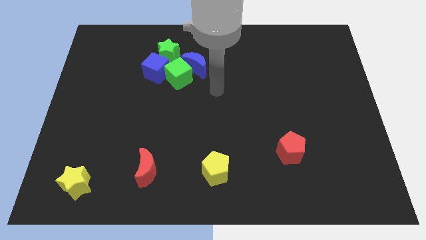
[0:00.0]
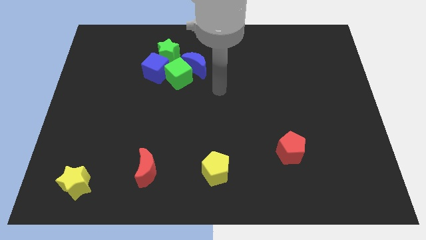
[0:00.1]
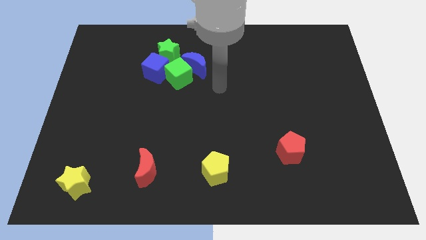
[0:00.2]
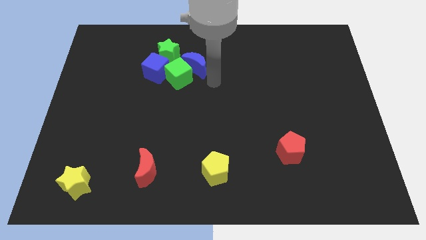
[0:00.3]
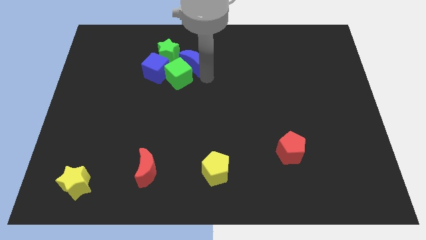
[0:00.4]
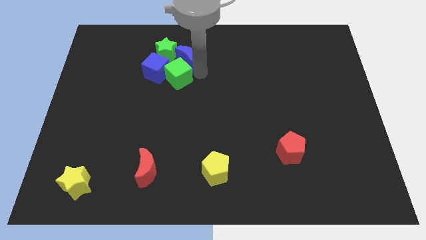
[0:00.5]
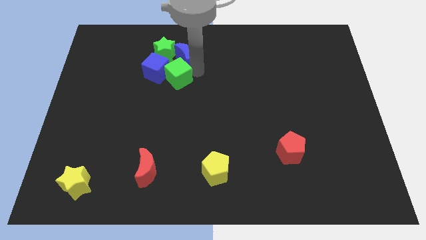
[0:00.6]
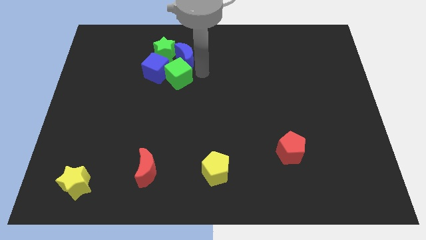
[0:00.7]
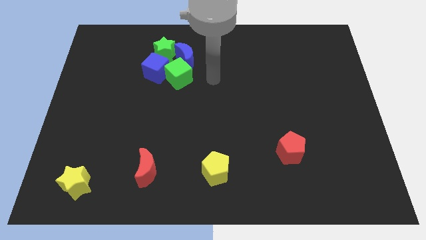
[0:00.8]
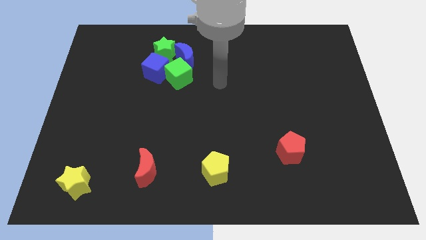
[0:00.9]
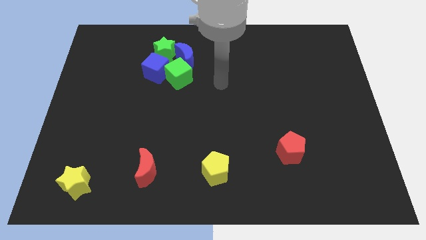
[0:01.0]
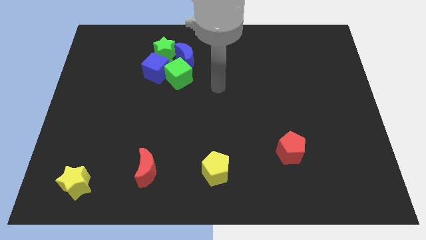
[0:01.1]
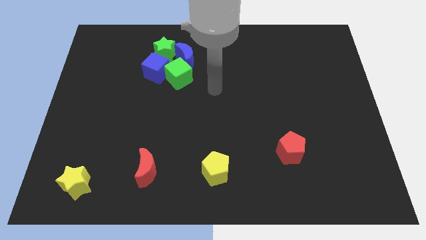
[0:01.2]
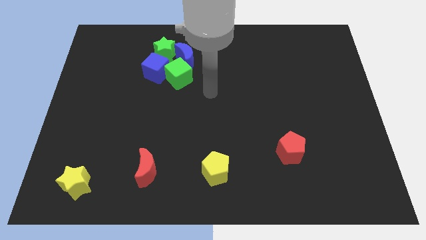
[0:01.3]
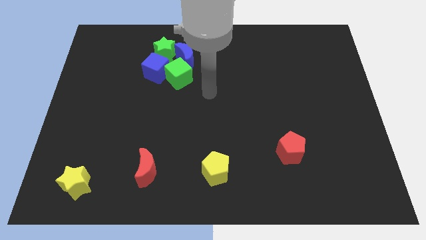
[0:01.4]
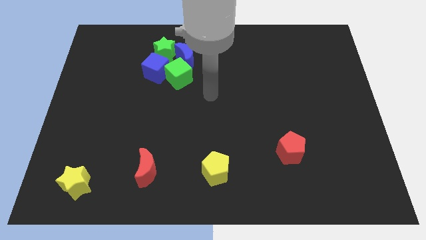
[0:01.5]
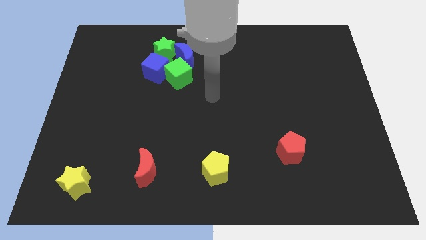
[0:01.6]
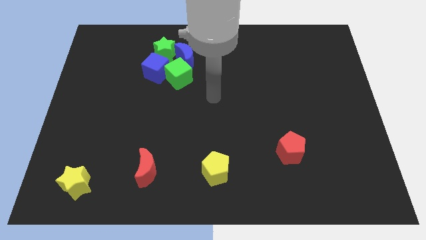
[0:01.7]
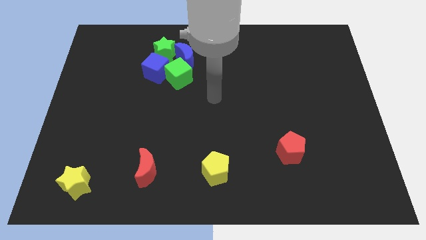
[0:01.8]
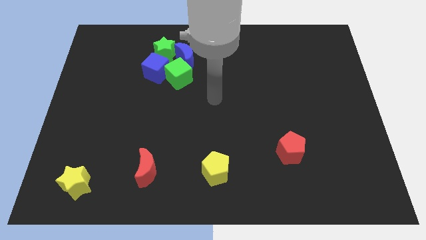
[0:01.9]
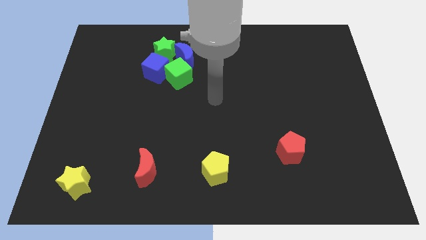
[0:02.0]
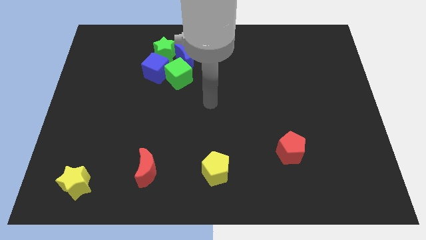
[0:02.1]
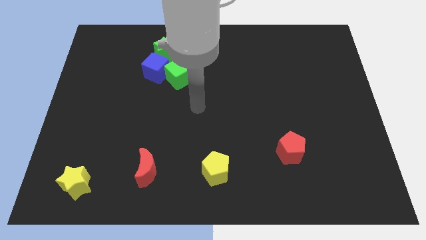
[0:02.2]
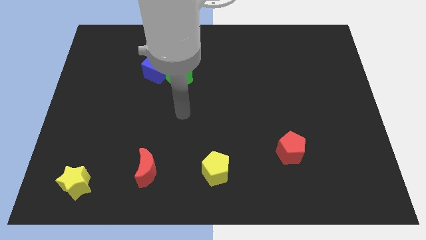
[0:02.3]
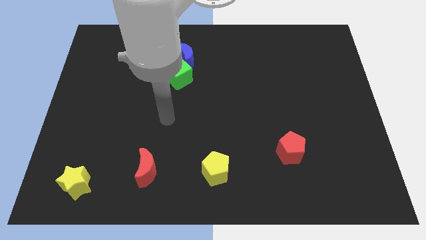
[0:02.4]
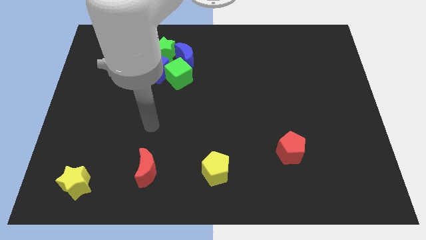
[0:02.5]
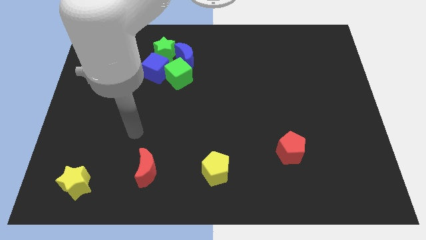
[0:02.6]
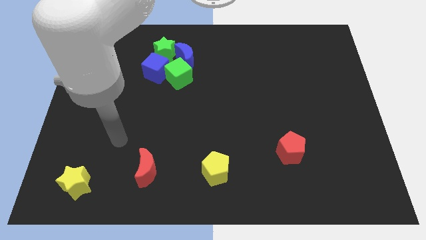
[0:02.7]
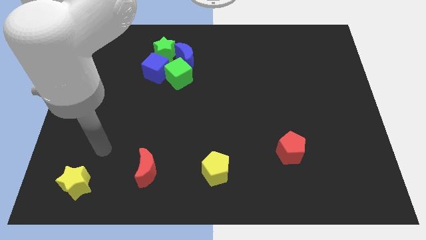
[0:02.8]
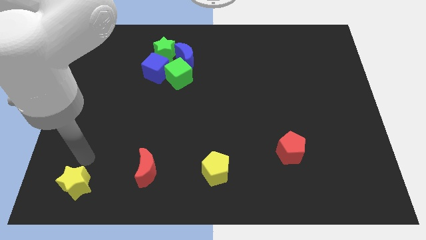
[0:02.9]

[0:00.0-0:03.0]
place your arm above yellow star

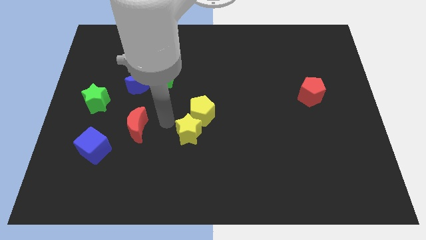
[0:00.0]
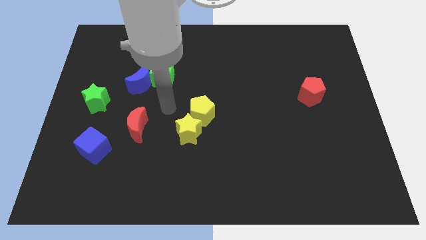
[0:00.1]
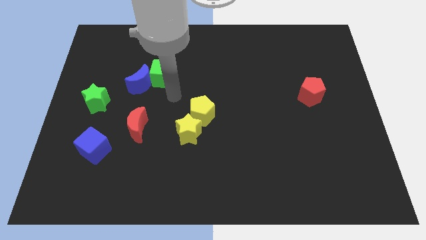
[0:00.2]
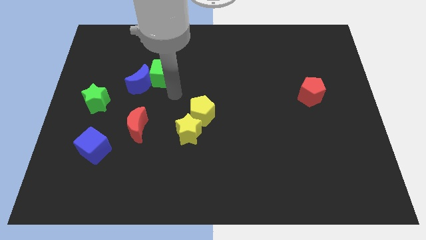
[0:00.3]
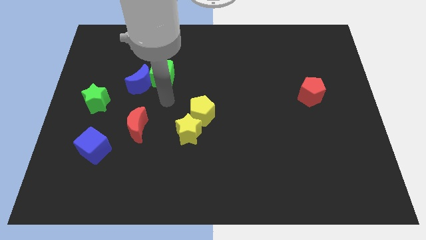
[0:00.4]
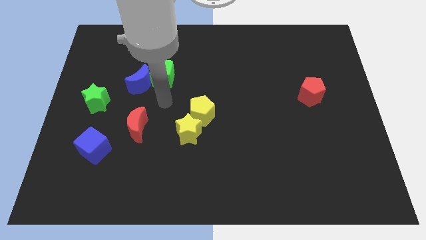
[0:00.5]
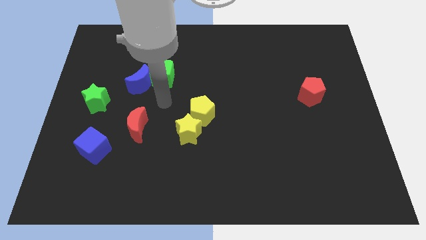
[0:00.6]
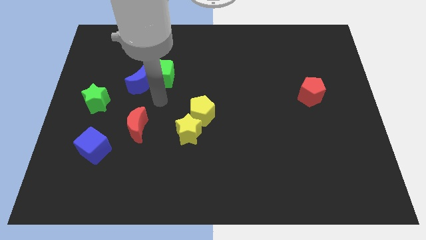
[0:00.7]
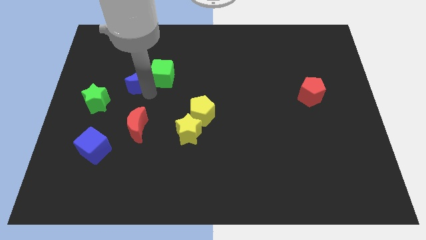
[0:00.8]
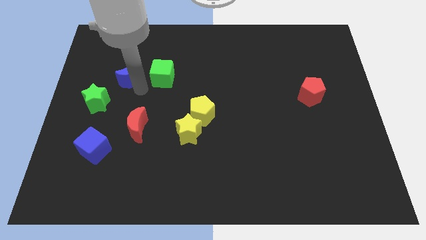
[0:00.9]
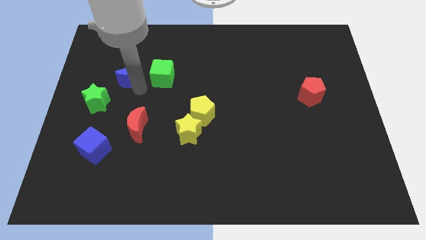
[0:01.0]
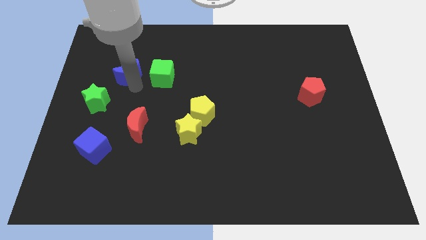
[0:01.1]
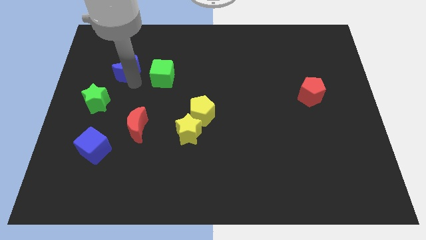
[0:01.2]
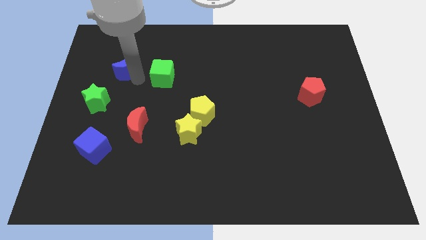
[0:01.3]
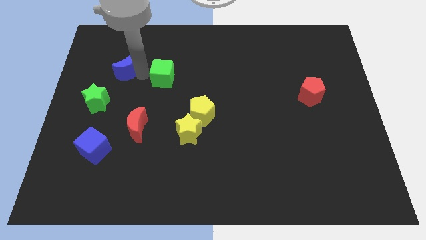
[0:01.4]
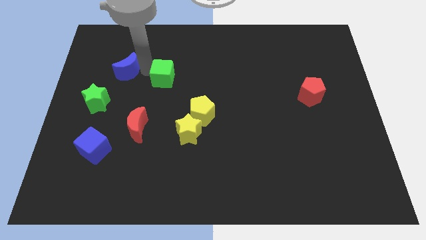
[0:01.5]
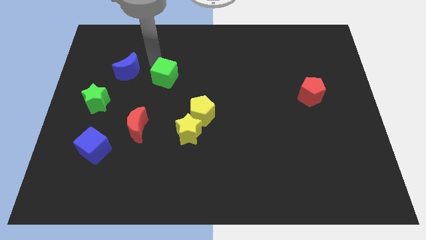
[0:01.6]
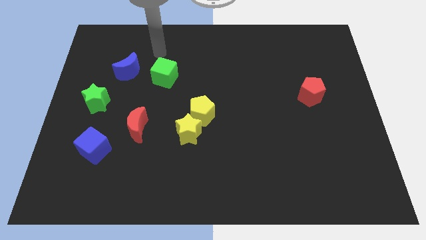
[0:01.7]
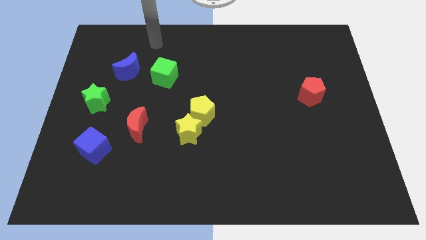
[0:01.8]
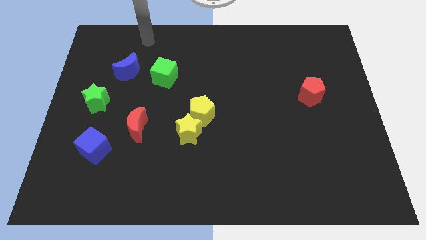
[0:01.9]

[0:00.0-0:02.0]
separate the blue moon from the green cube

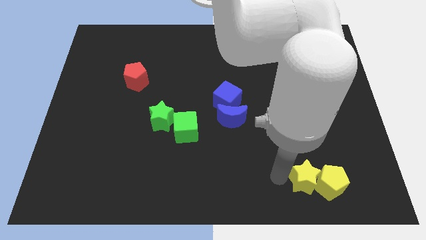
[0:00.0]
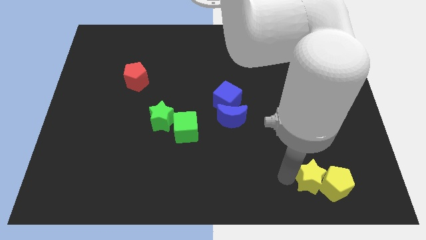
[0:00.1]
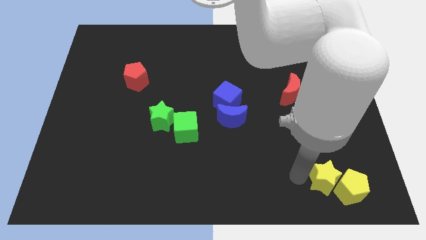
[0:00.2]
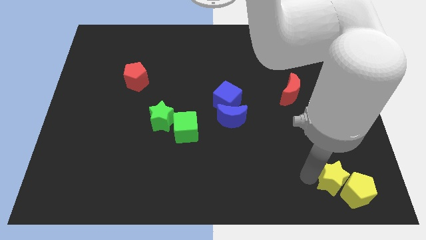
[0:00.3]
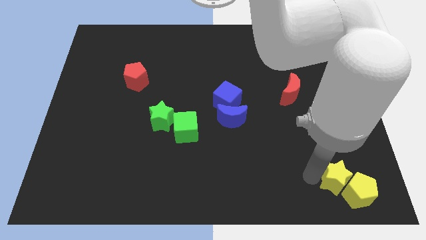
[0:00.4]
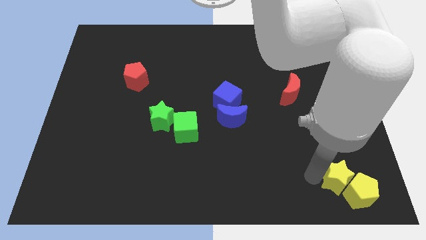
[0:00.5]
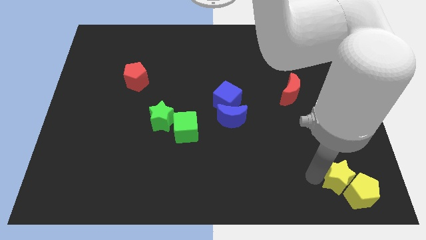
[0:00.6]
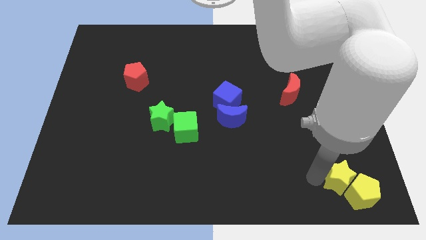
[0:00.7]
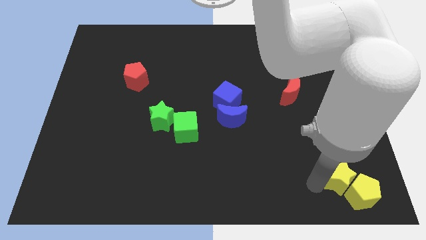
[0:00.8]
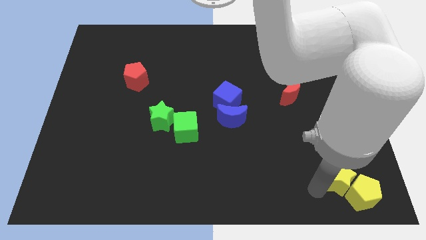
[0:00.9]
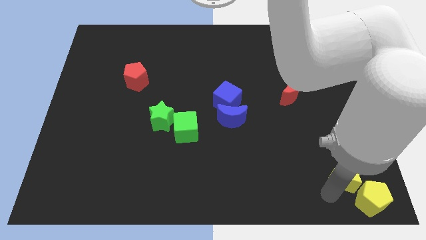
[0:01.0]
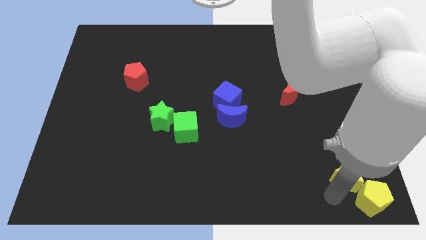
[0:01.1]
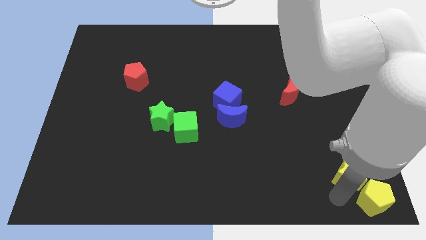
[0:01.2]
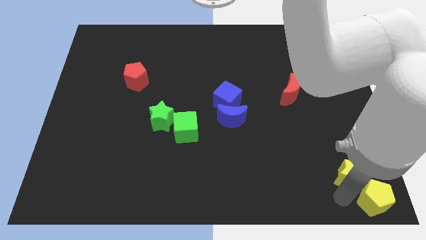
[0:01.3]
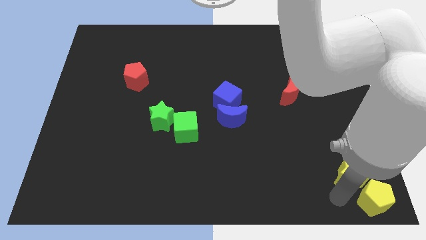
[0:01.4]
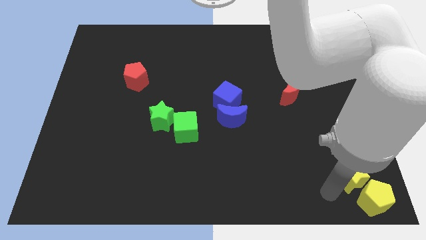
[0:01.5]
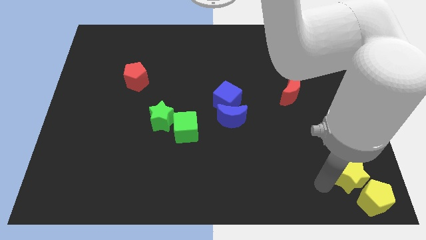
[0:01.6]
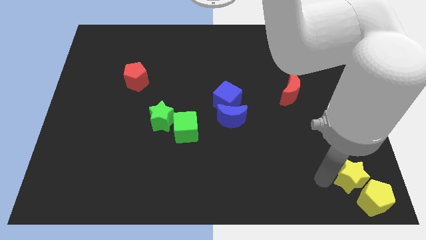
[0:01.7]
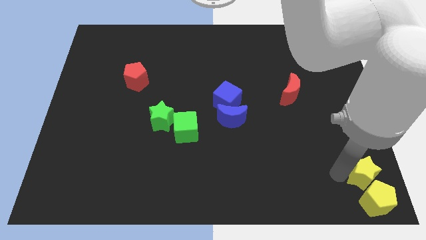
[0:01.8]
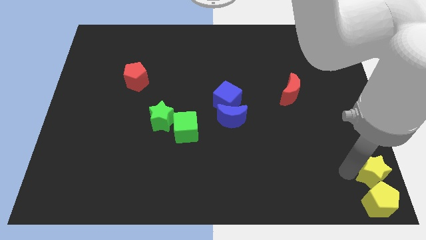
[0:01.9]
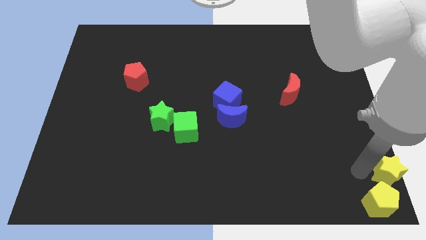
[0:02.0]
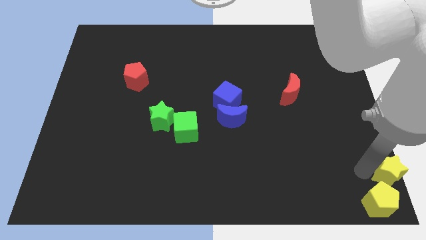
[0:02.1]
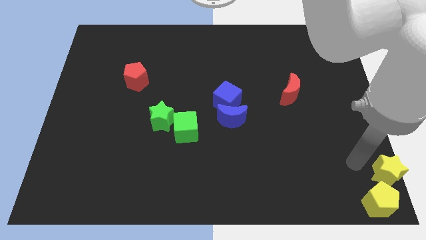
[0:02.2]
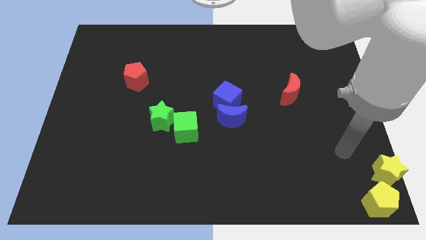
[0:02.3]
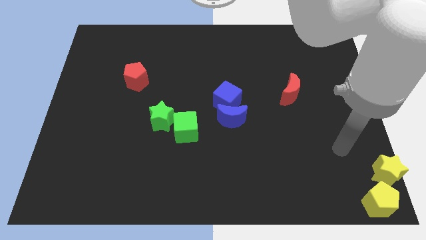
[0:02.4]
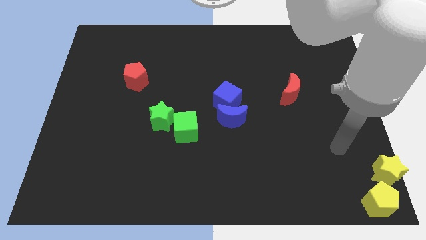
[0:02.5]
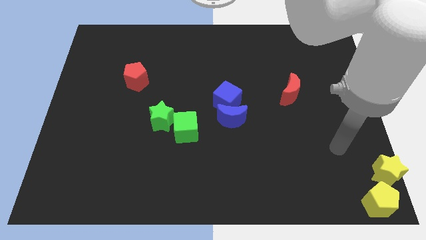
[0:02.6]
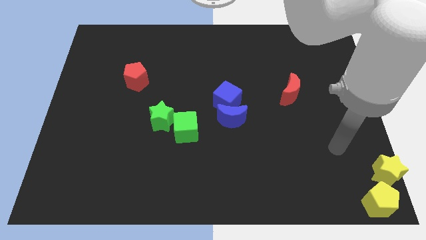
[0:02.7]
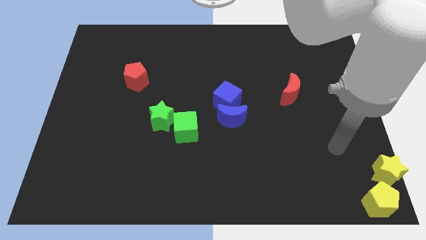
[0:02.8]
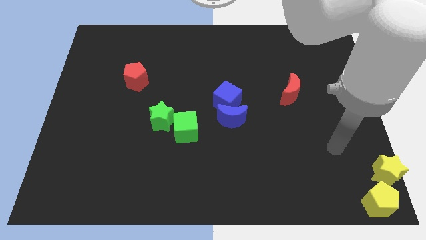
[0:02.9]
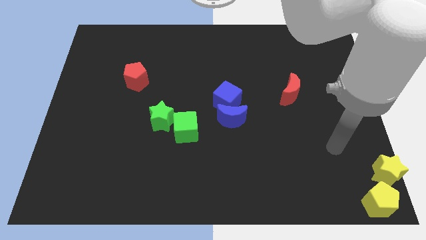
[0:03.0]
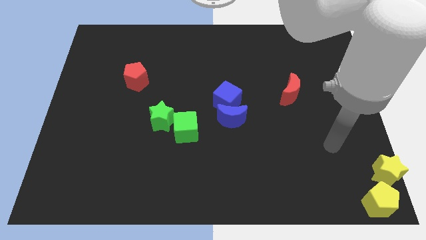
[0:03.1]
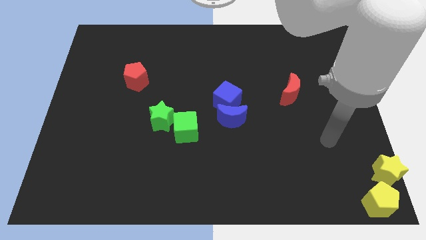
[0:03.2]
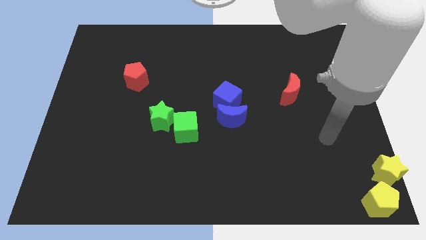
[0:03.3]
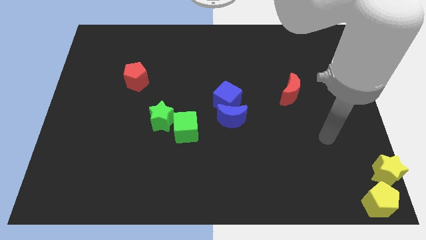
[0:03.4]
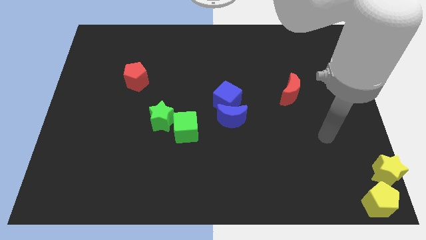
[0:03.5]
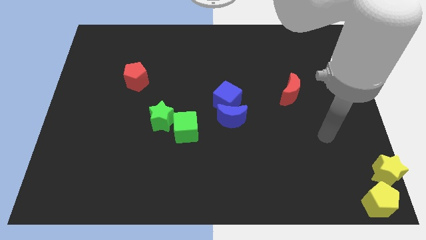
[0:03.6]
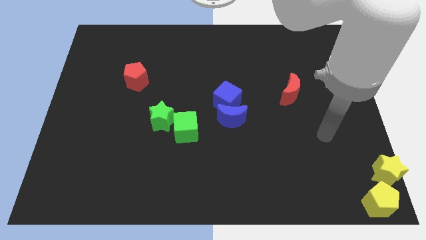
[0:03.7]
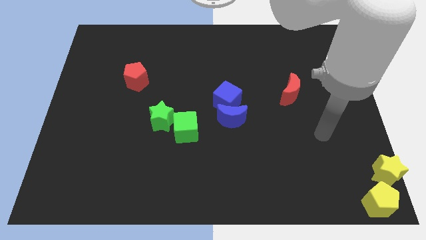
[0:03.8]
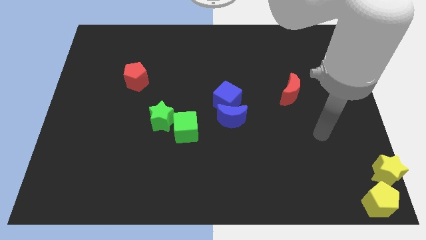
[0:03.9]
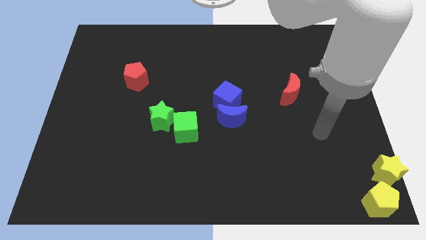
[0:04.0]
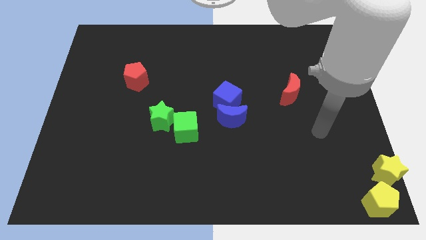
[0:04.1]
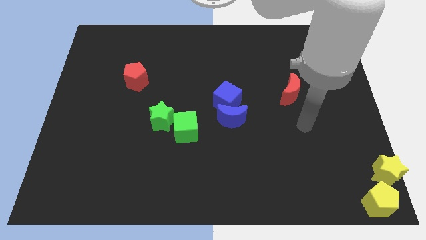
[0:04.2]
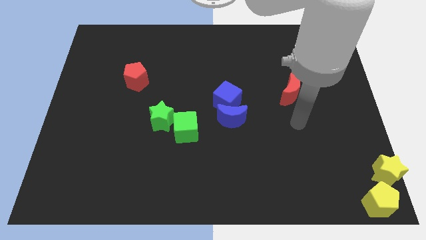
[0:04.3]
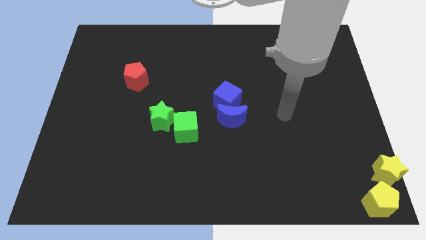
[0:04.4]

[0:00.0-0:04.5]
place the yellow star and yellow pentagon at the bottom right corner of the board
